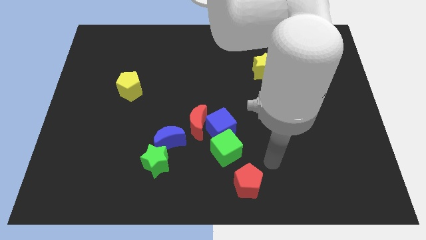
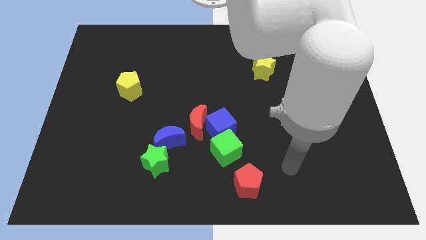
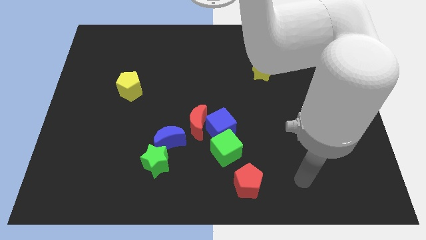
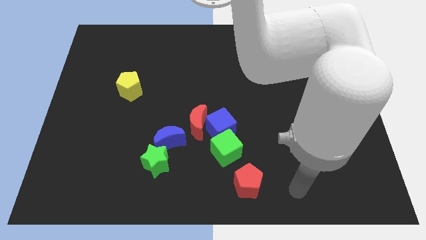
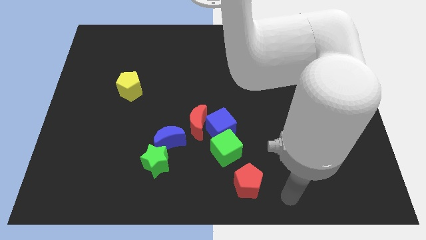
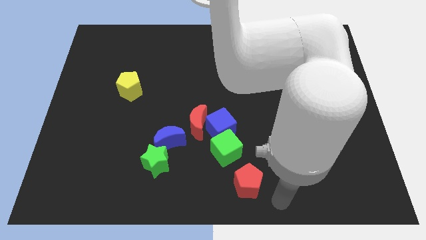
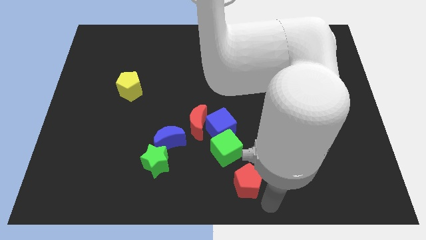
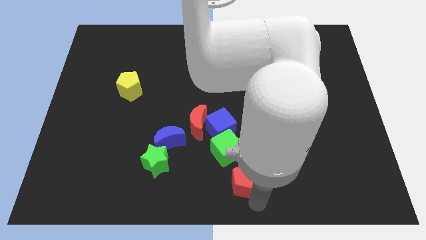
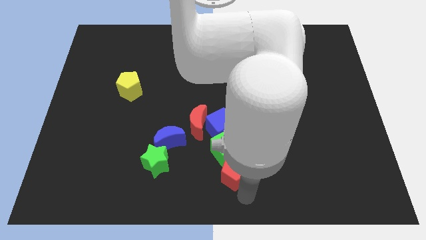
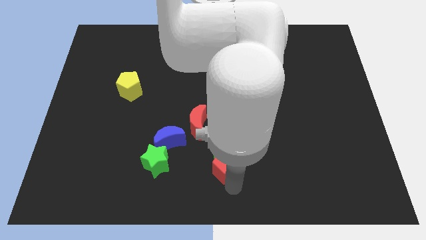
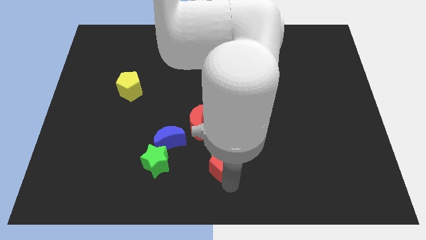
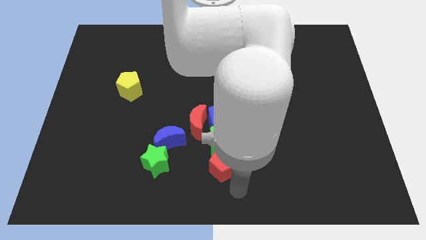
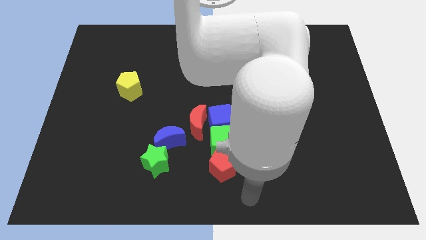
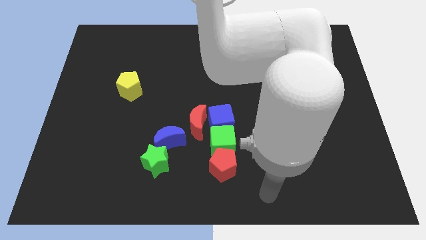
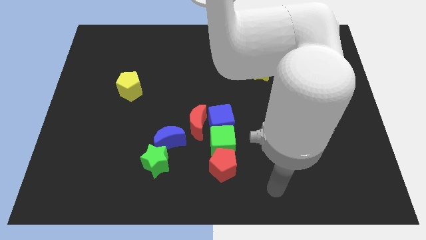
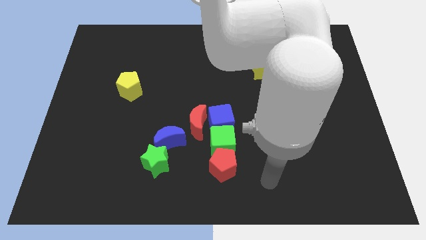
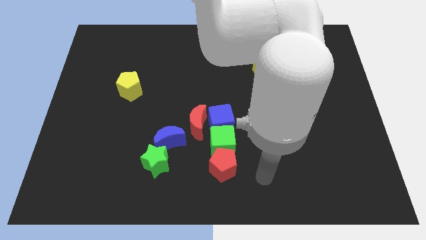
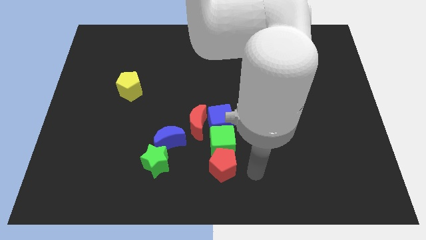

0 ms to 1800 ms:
place the red pentagon below the green cube

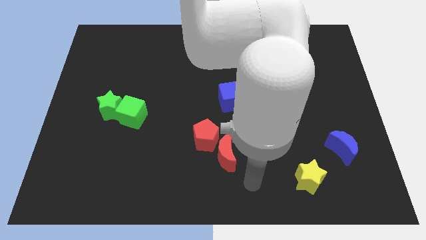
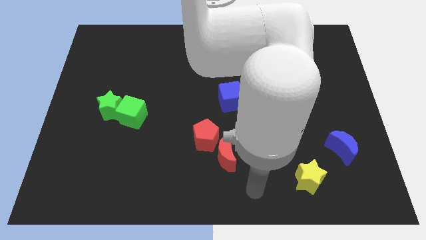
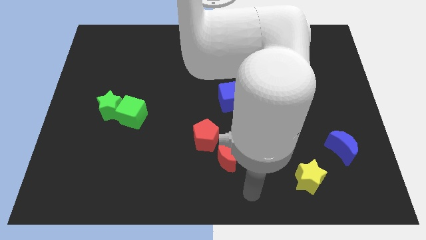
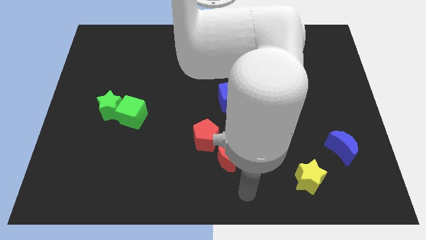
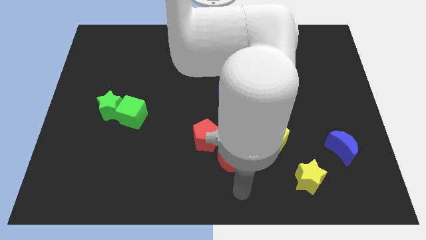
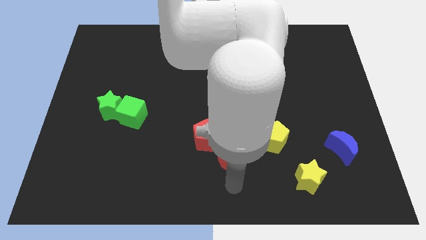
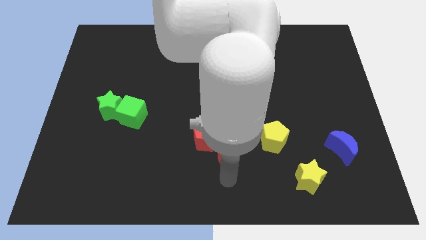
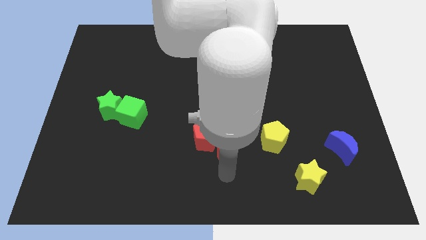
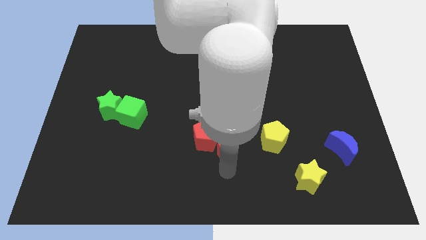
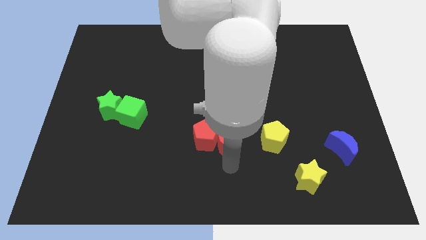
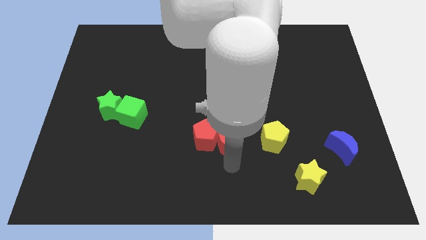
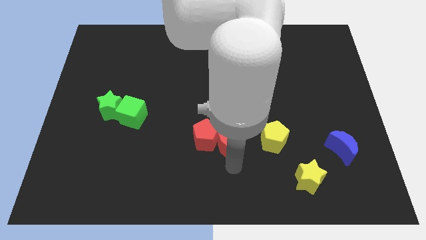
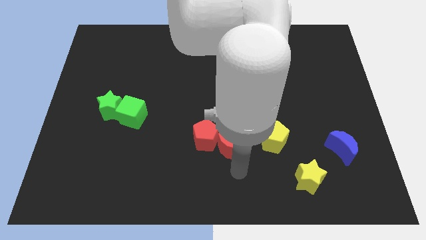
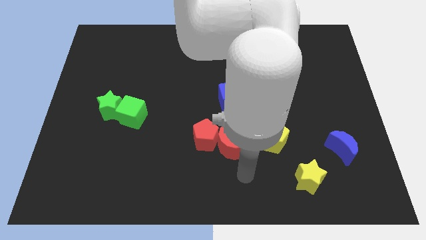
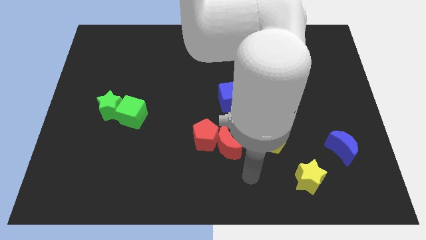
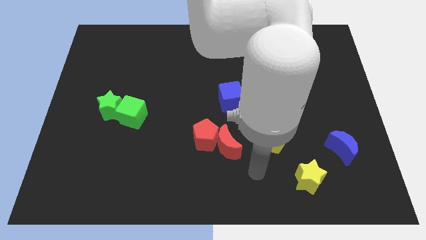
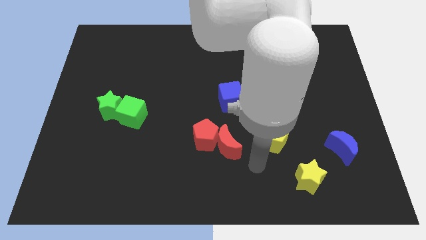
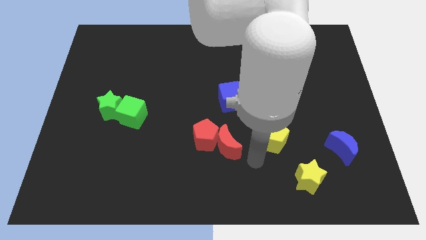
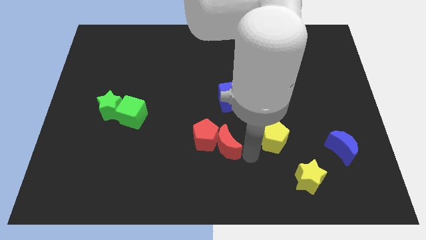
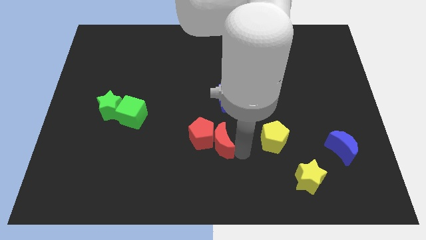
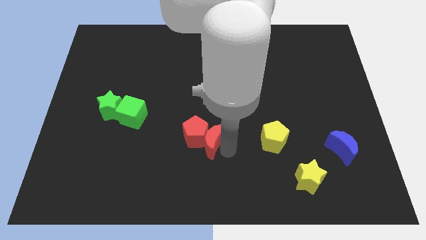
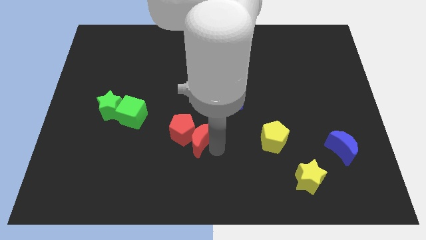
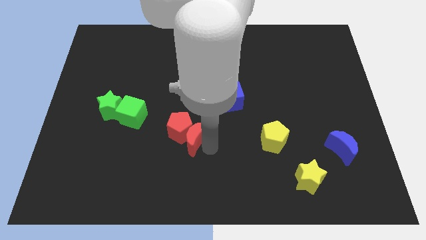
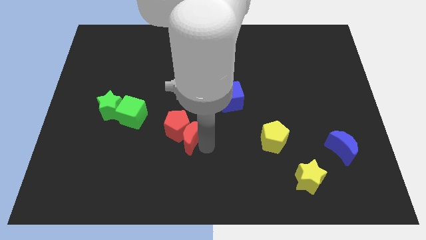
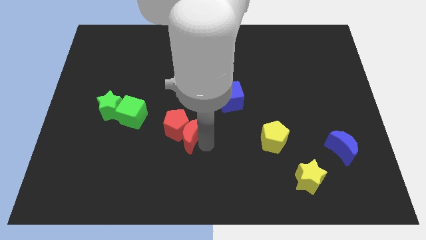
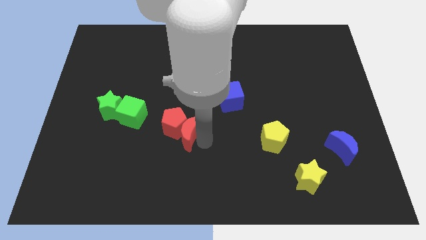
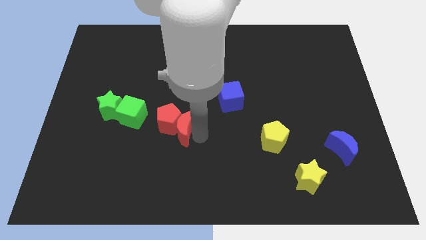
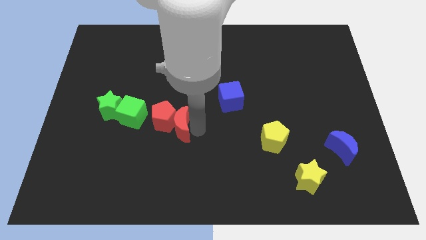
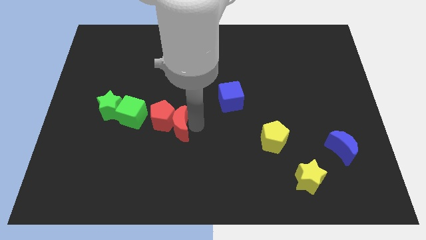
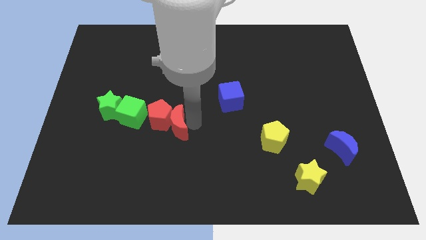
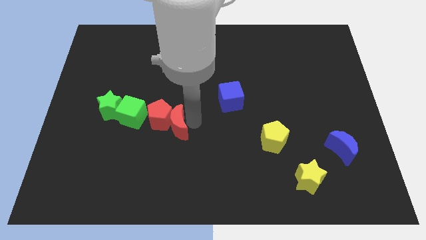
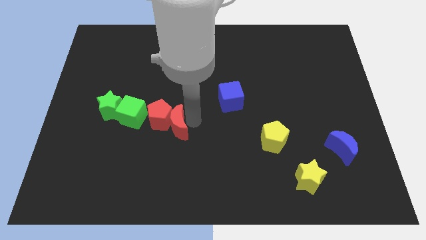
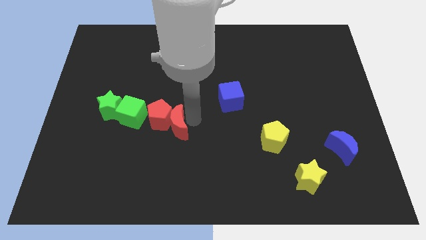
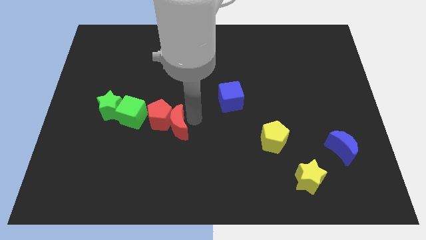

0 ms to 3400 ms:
push red block towards green cube

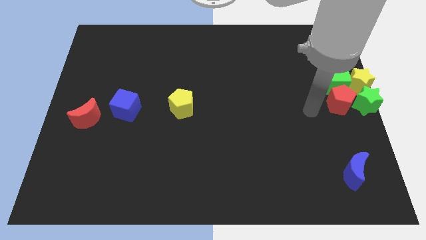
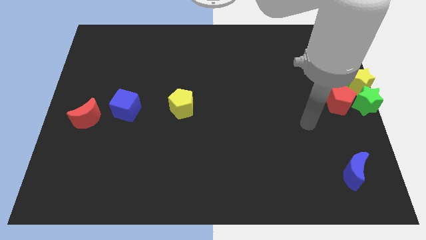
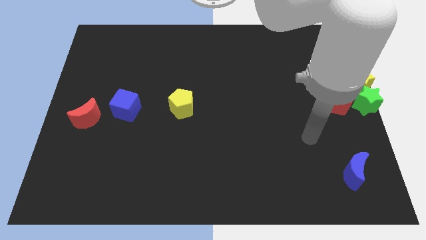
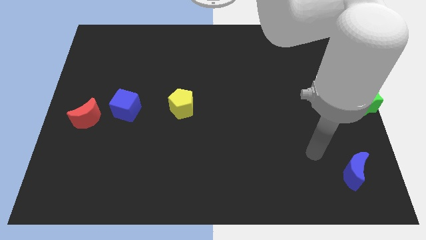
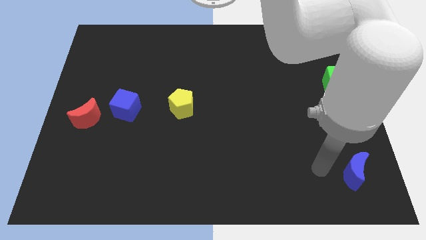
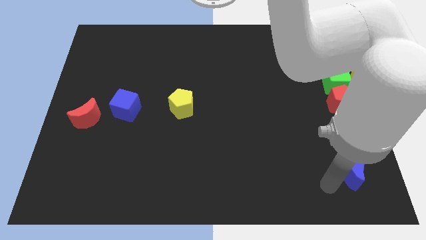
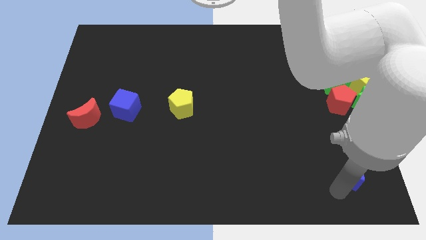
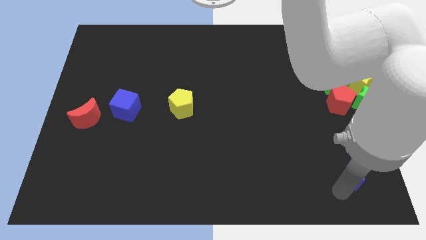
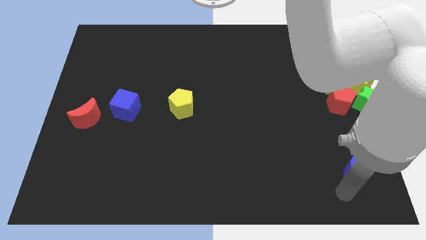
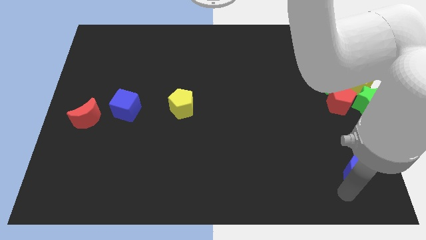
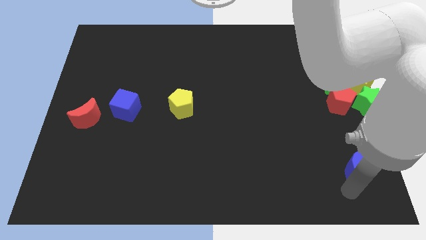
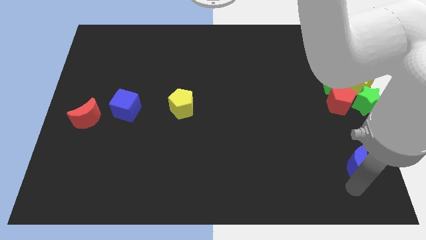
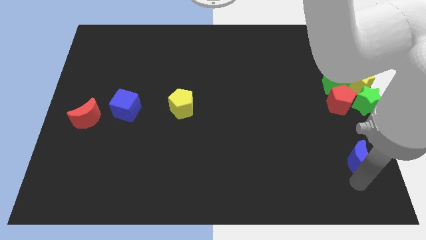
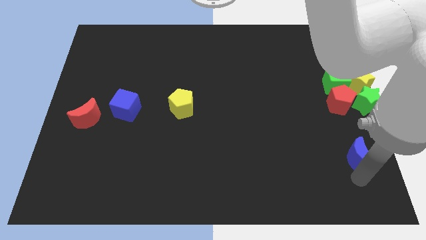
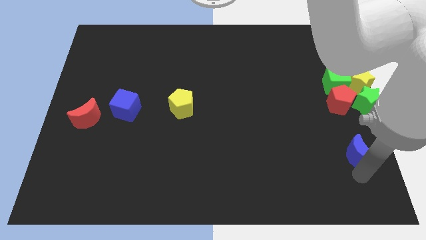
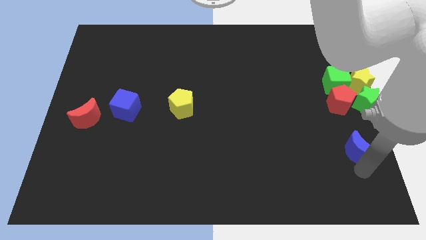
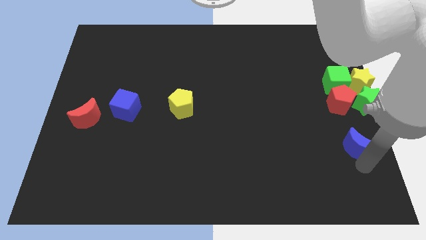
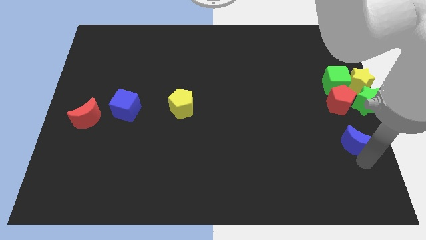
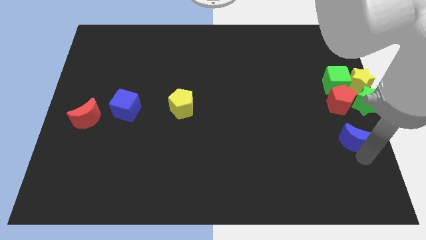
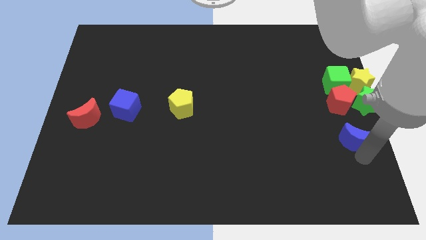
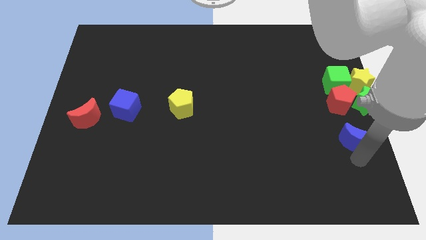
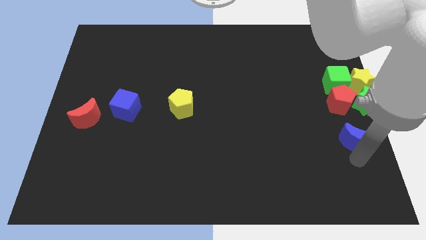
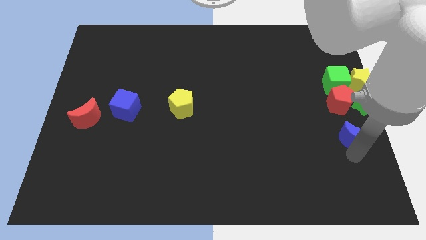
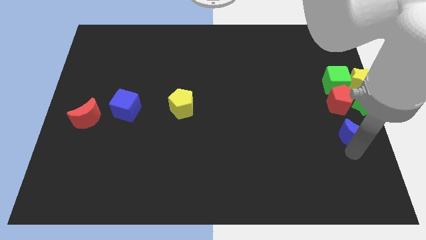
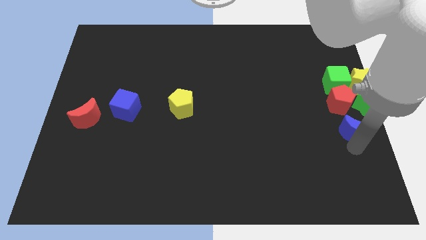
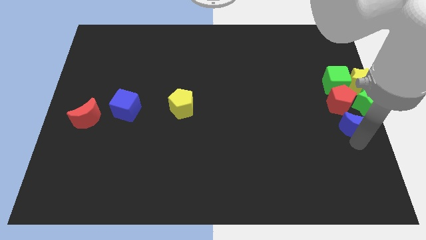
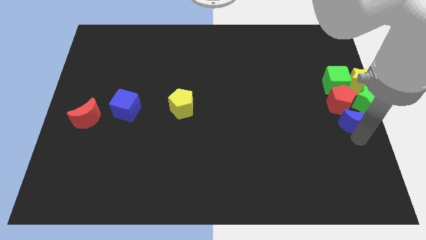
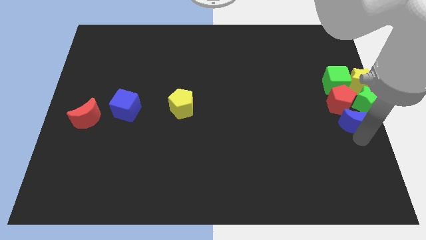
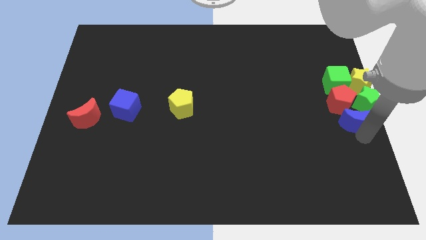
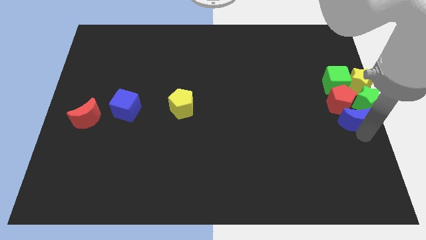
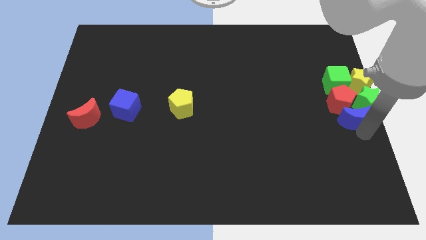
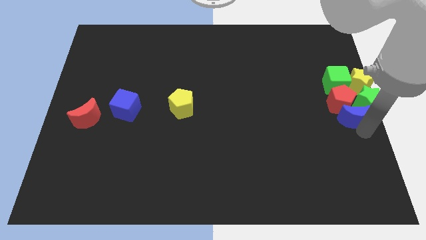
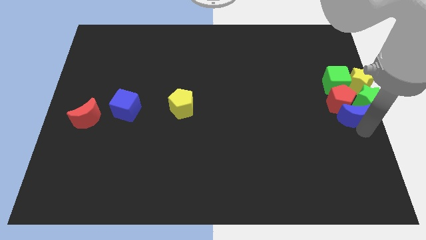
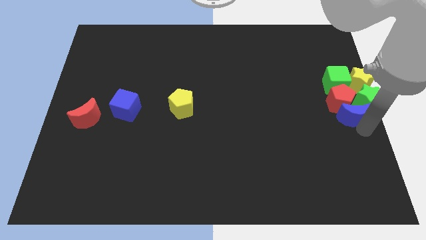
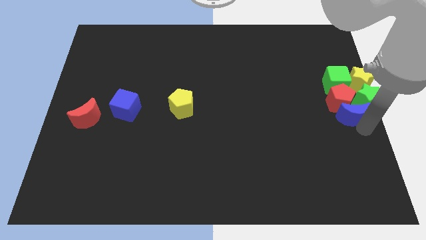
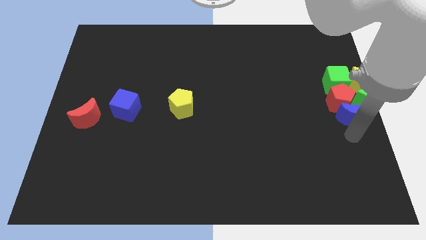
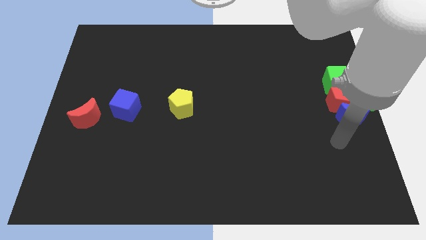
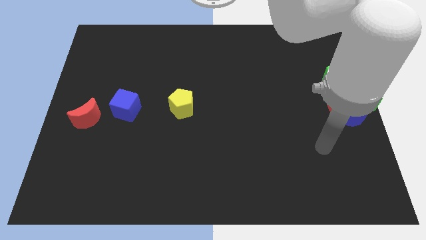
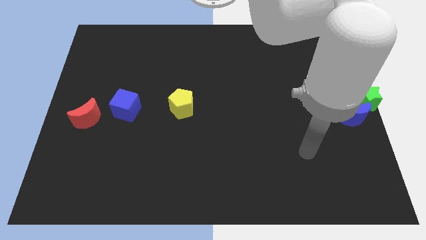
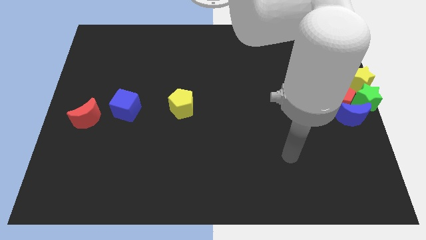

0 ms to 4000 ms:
push the blue moon into the red pentagon and the green star
